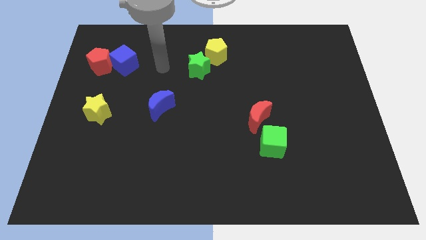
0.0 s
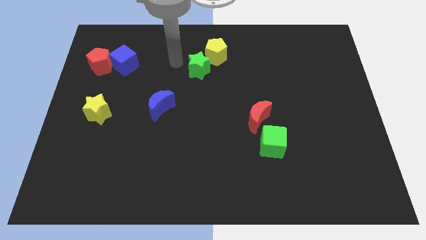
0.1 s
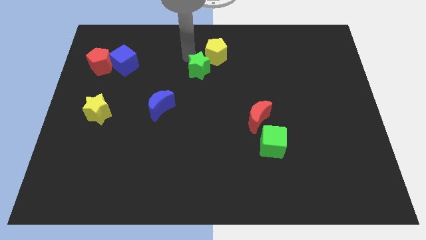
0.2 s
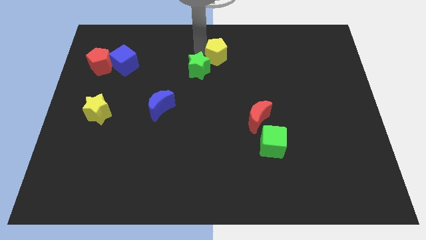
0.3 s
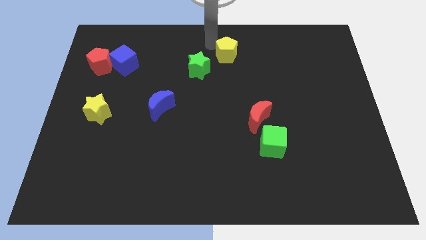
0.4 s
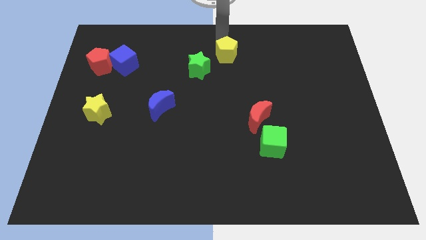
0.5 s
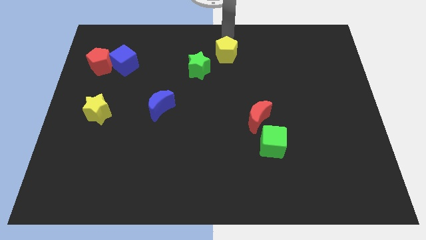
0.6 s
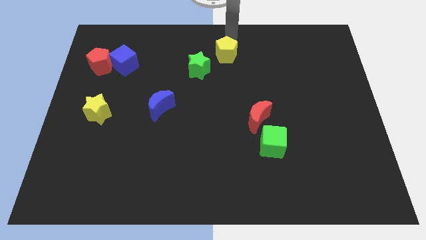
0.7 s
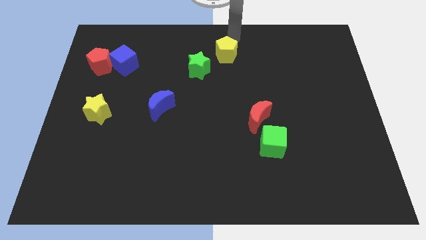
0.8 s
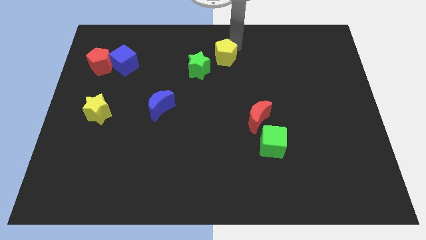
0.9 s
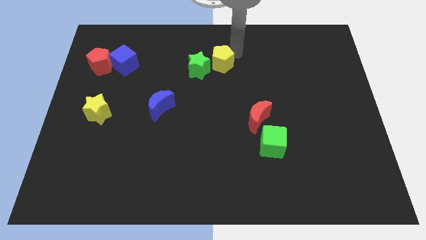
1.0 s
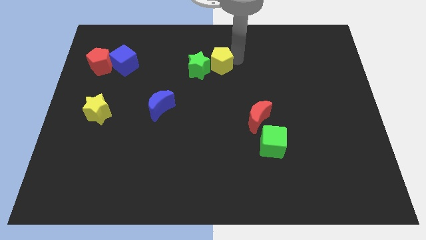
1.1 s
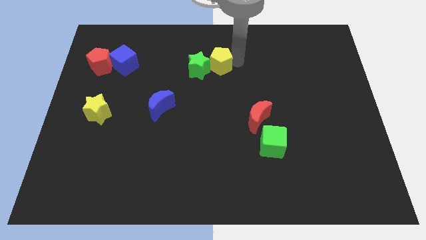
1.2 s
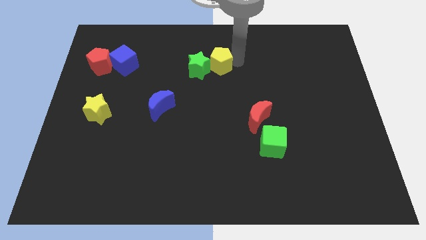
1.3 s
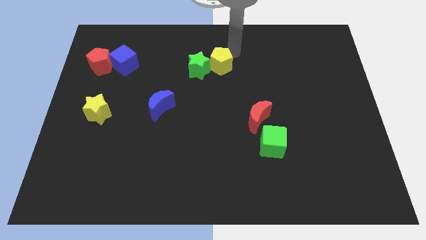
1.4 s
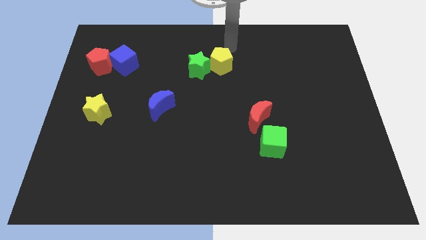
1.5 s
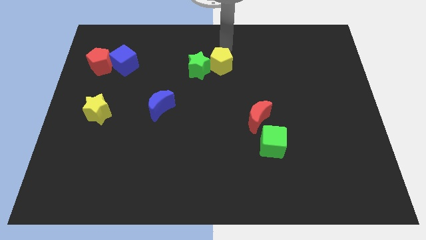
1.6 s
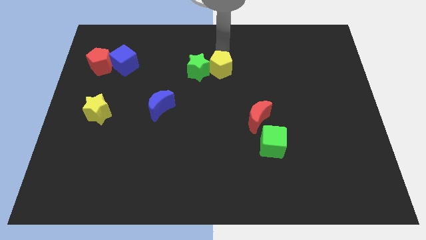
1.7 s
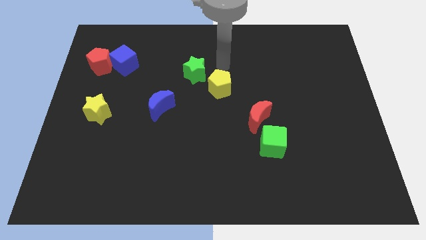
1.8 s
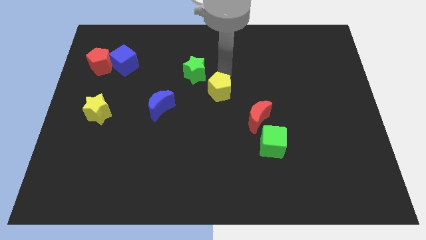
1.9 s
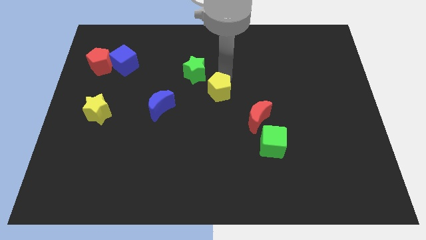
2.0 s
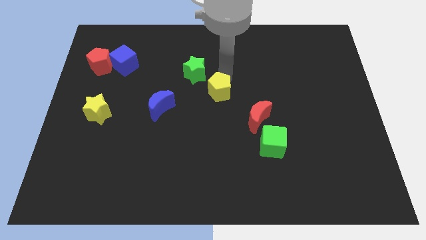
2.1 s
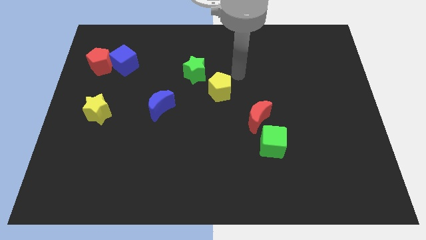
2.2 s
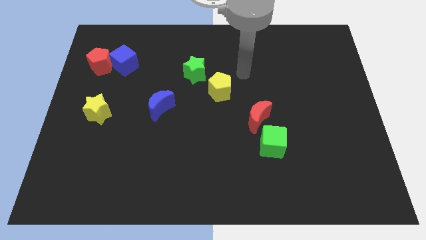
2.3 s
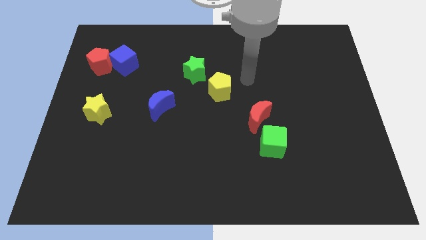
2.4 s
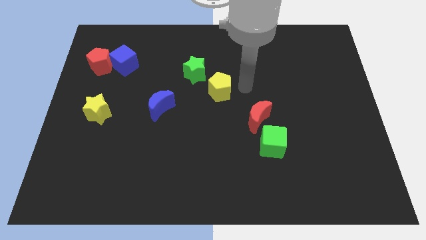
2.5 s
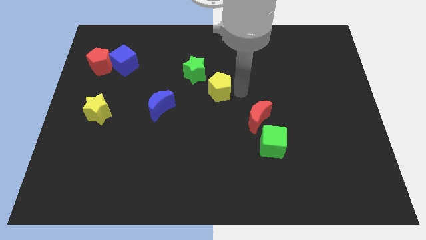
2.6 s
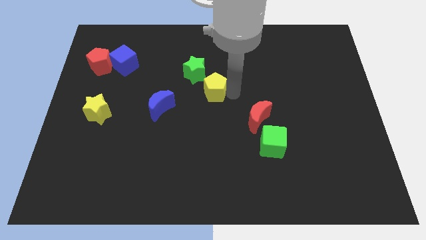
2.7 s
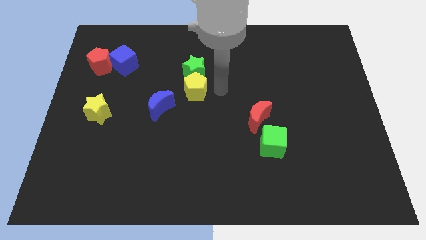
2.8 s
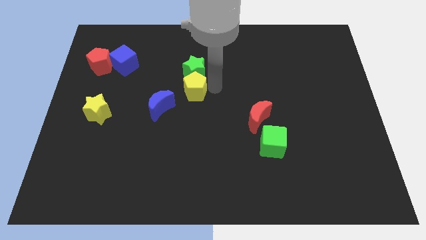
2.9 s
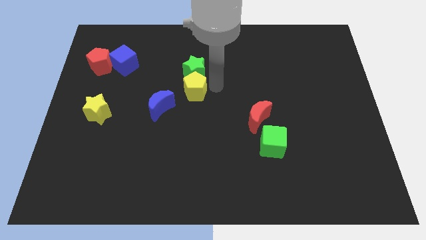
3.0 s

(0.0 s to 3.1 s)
place the yellow pentagon below the green star

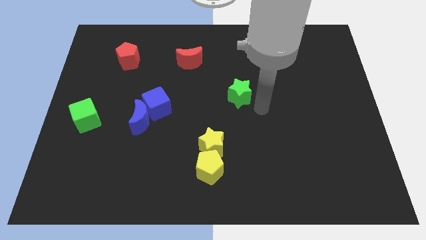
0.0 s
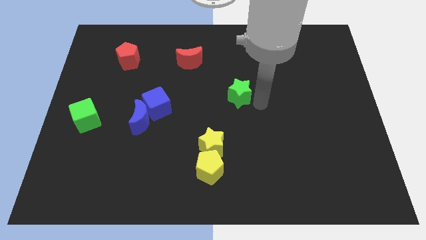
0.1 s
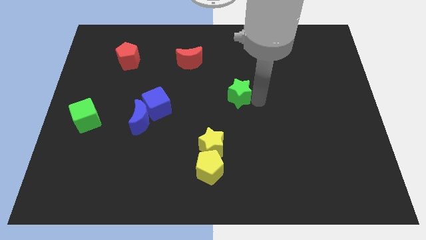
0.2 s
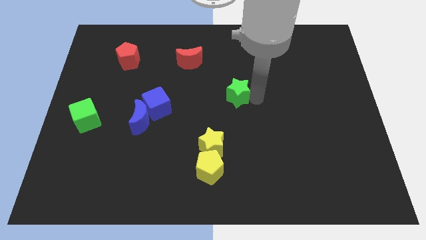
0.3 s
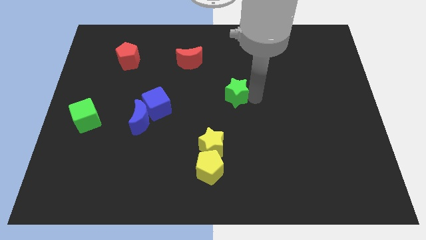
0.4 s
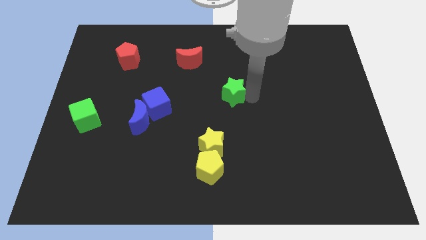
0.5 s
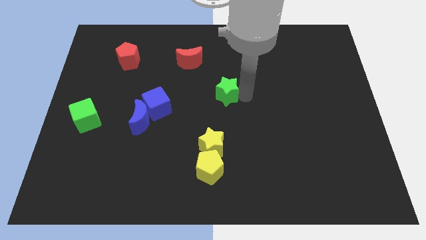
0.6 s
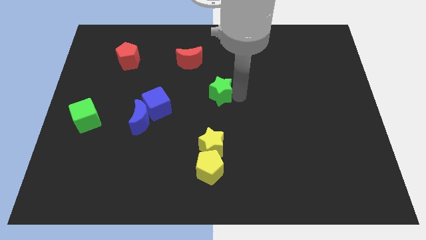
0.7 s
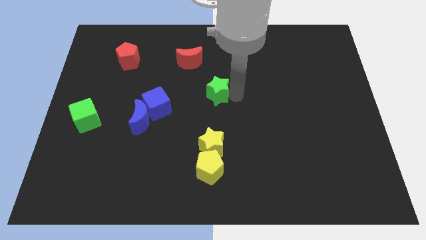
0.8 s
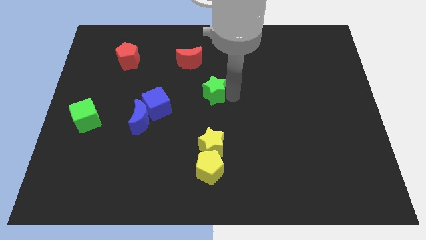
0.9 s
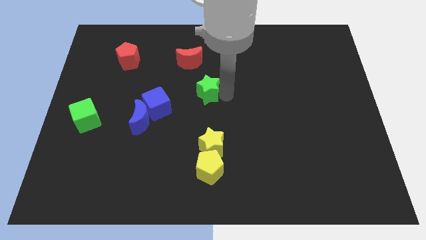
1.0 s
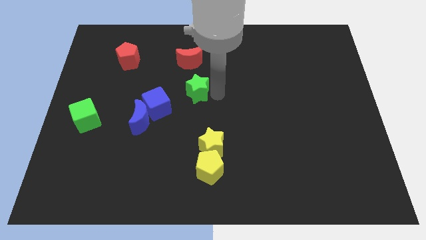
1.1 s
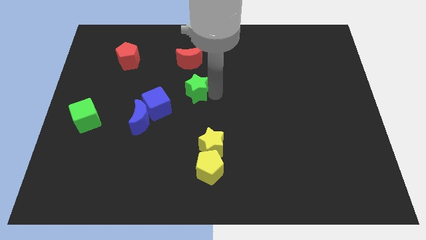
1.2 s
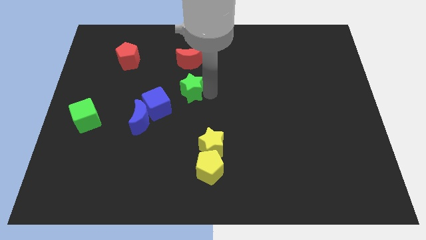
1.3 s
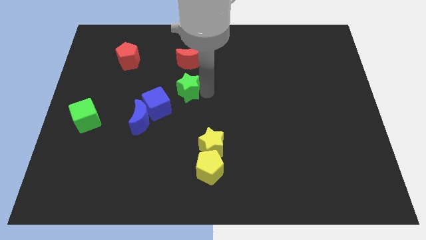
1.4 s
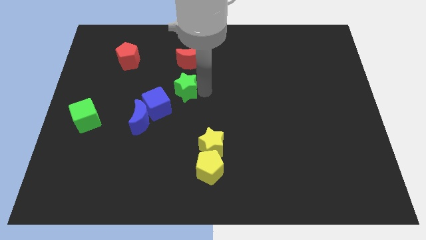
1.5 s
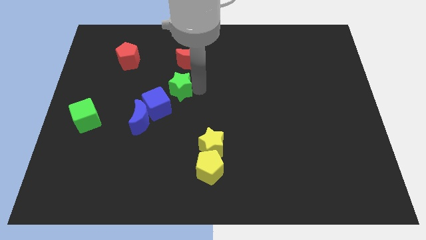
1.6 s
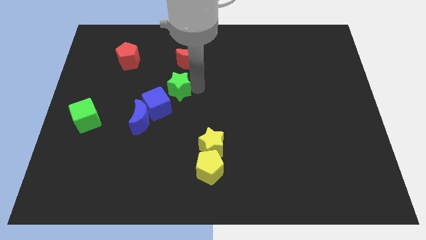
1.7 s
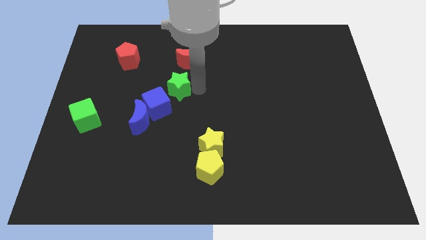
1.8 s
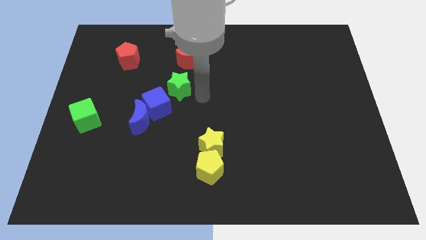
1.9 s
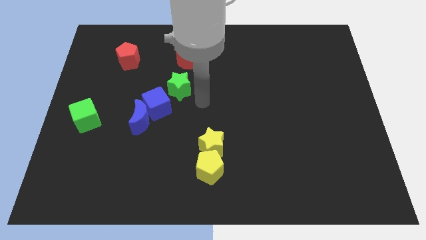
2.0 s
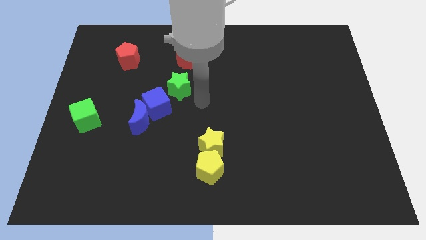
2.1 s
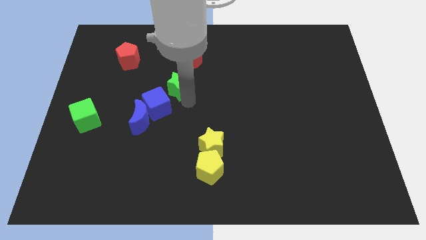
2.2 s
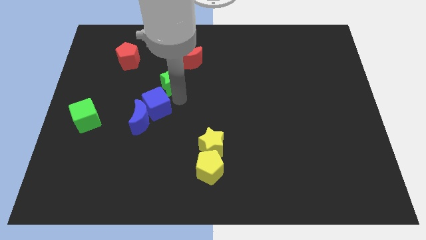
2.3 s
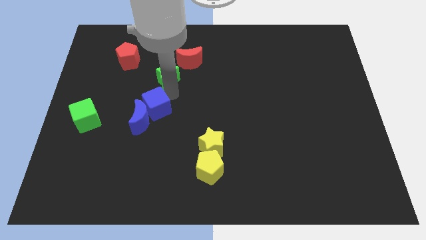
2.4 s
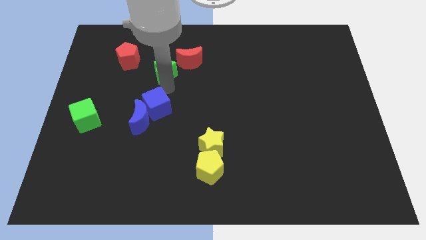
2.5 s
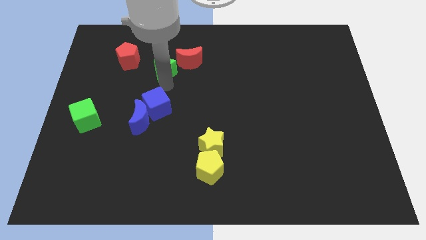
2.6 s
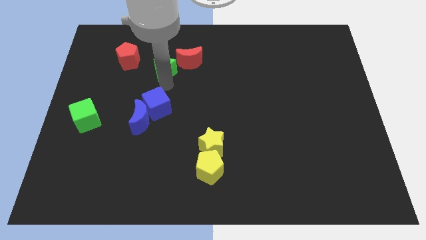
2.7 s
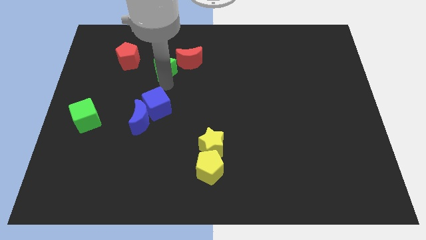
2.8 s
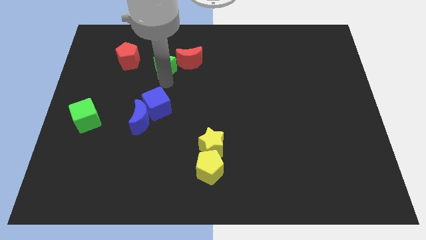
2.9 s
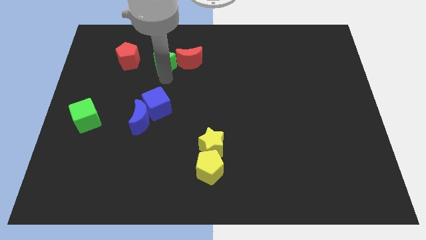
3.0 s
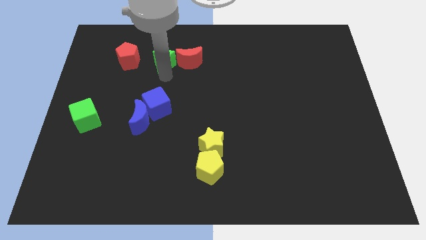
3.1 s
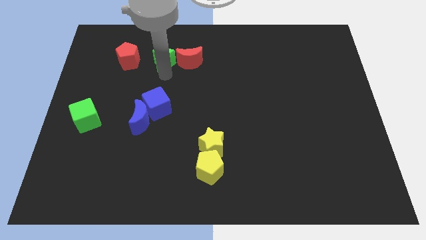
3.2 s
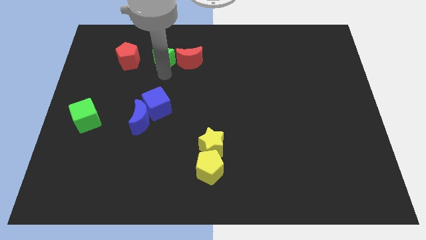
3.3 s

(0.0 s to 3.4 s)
place the green star to the left of the red crescent

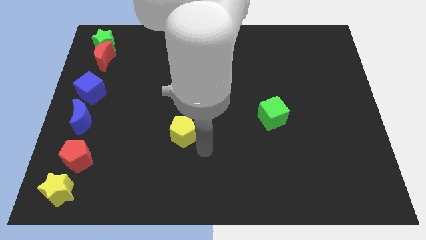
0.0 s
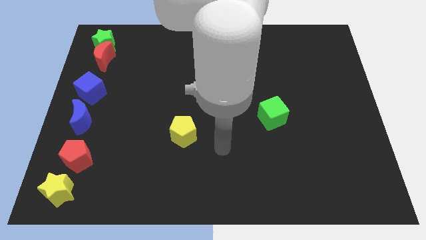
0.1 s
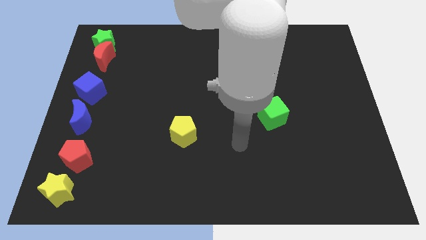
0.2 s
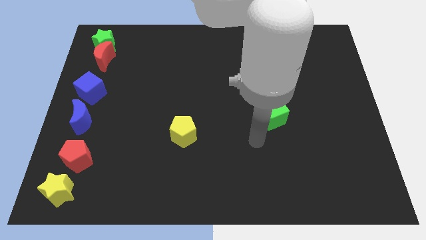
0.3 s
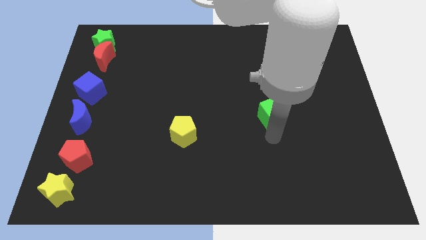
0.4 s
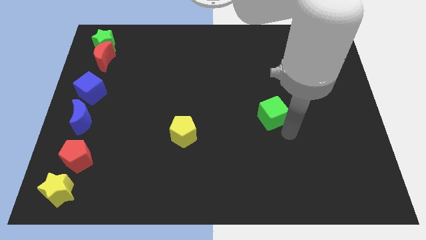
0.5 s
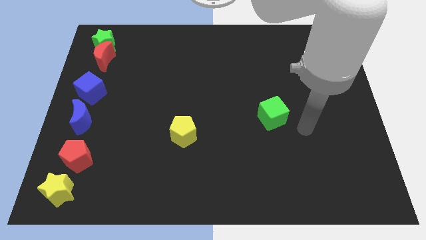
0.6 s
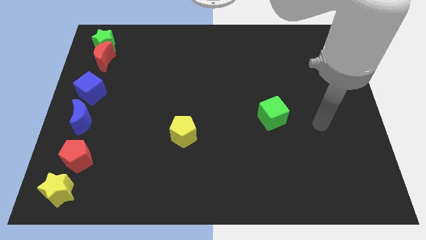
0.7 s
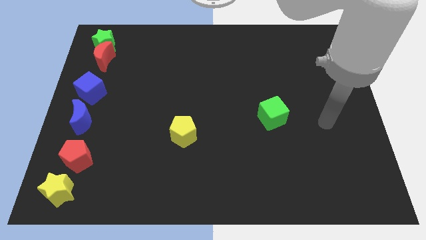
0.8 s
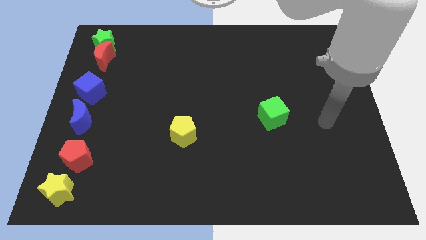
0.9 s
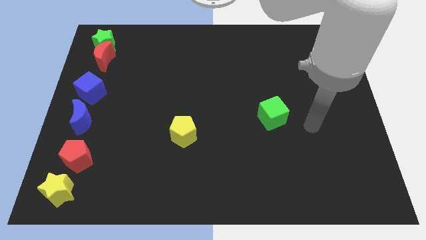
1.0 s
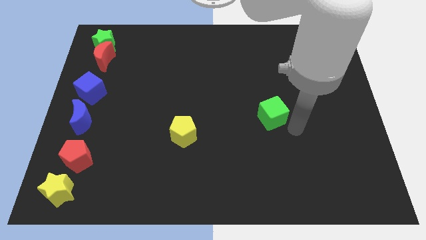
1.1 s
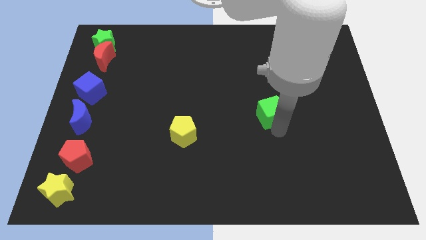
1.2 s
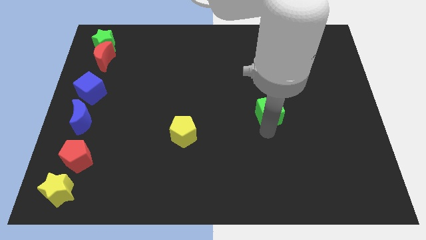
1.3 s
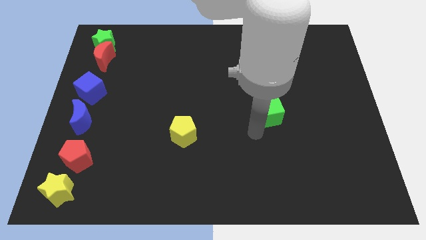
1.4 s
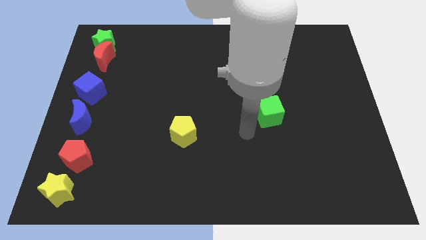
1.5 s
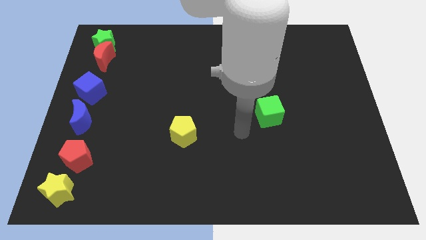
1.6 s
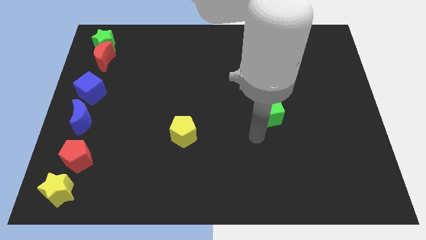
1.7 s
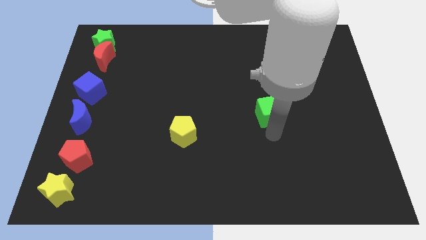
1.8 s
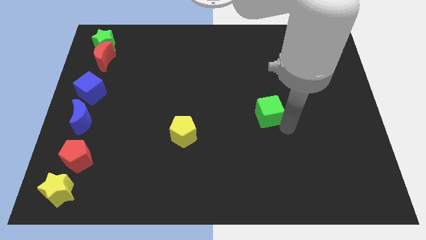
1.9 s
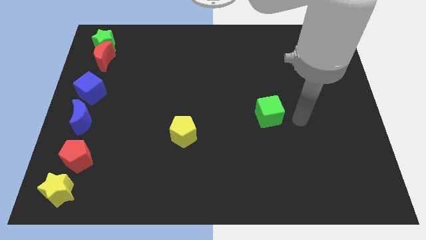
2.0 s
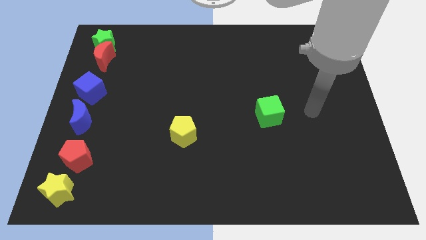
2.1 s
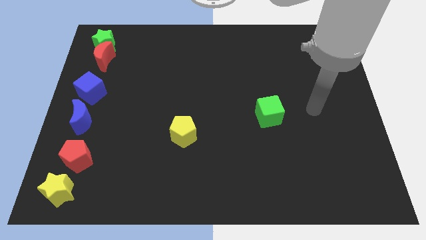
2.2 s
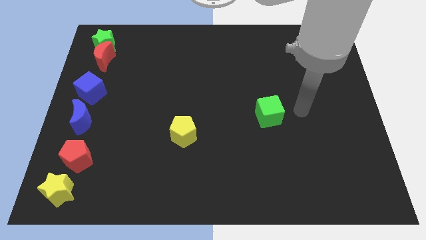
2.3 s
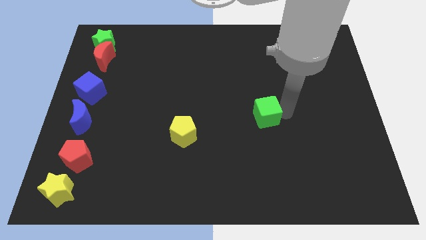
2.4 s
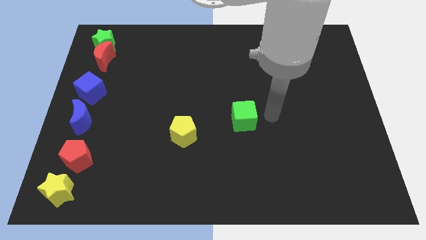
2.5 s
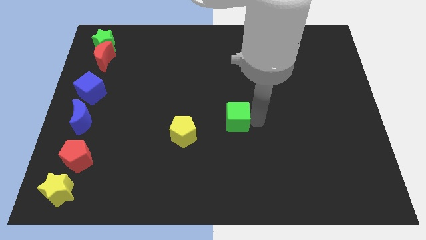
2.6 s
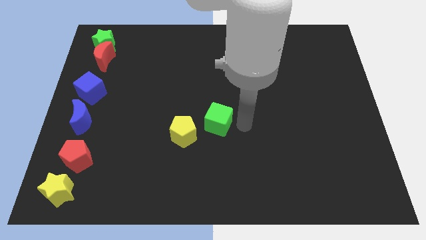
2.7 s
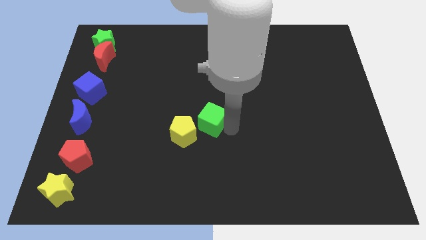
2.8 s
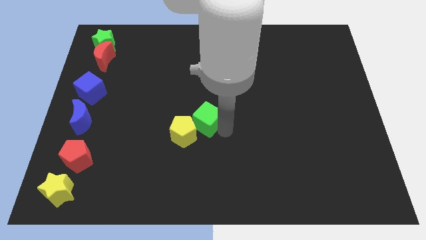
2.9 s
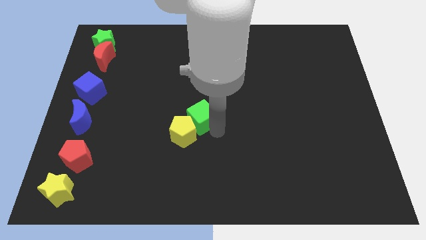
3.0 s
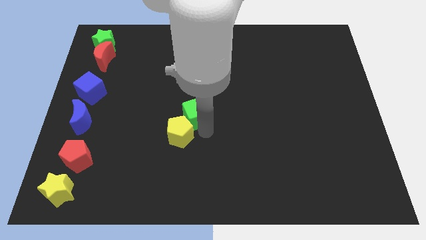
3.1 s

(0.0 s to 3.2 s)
push the green cube into the top right of the yellow pentagon
